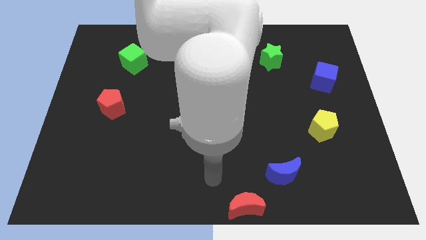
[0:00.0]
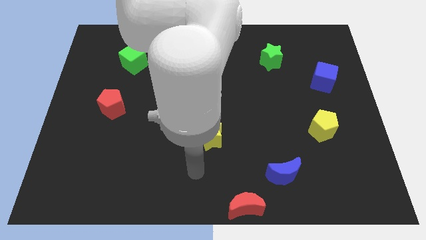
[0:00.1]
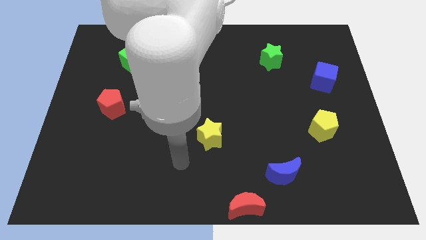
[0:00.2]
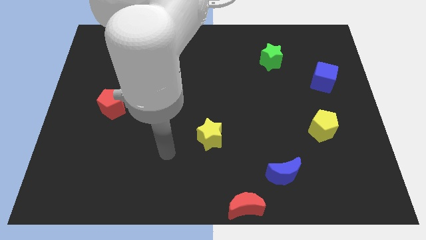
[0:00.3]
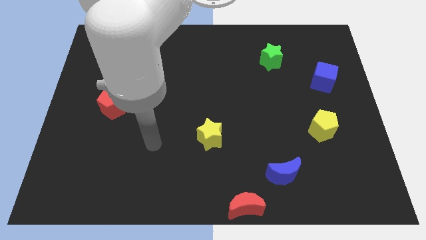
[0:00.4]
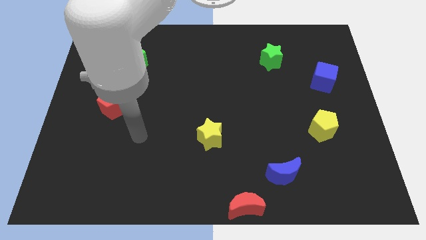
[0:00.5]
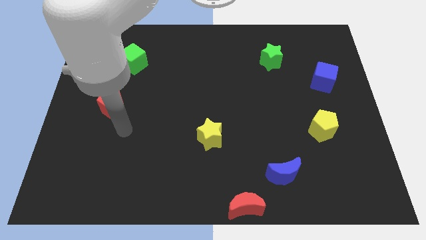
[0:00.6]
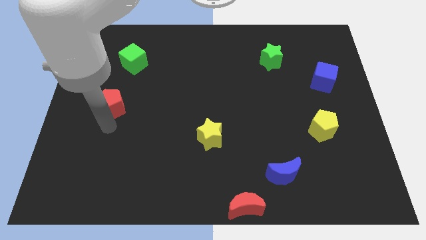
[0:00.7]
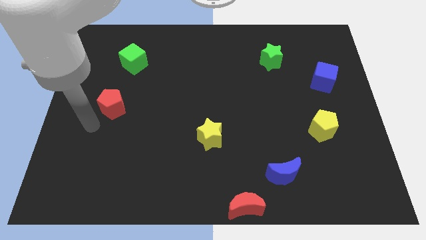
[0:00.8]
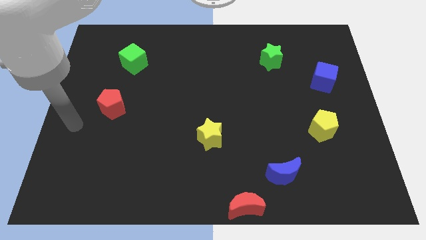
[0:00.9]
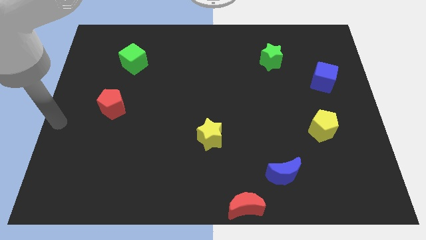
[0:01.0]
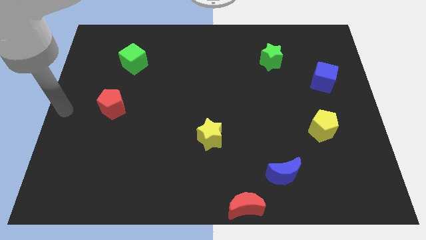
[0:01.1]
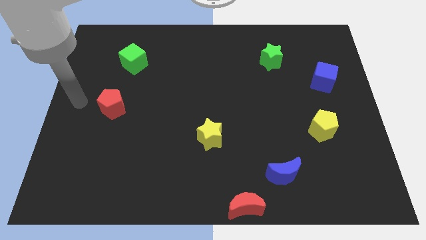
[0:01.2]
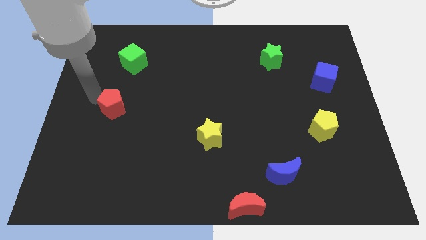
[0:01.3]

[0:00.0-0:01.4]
point the arm to the left of the red pentagon

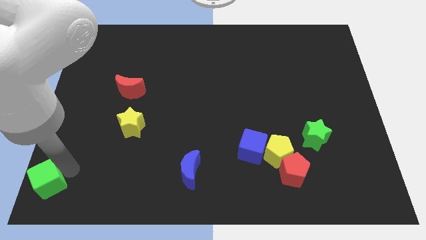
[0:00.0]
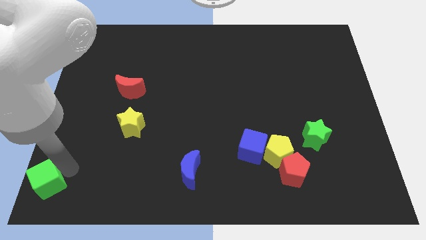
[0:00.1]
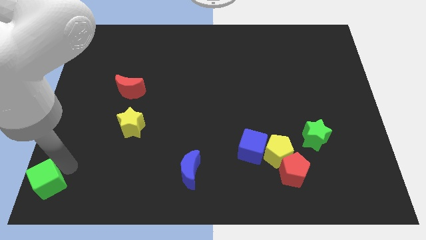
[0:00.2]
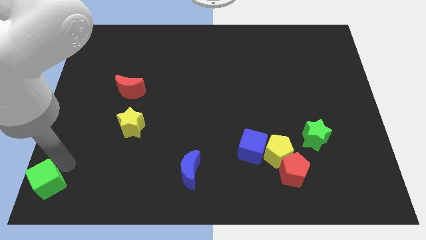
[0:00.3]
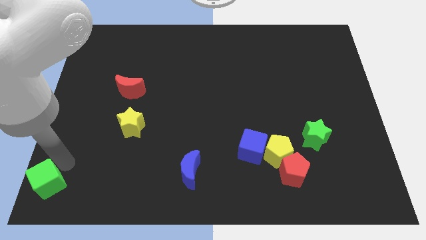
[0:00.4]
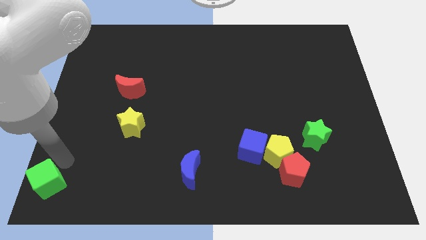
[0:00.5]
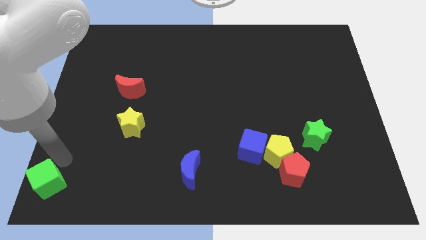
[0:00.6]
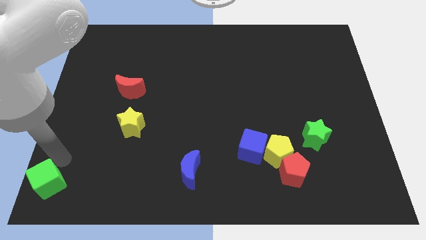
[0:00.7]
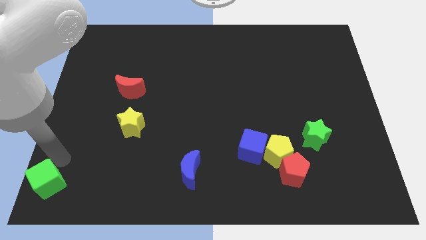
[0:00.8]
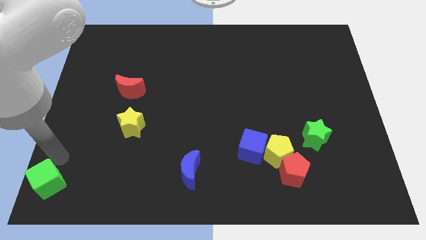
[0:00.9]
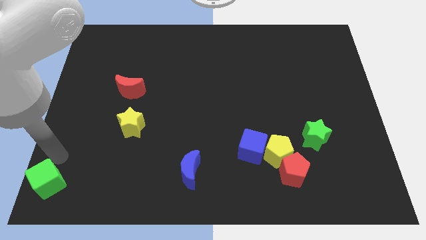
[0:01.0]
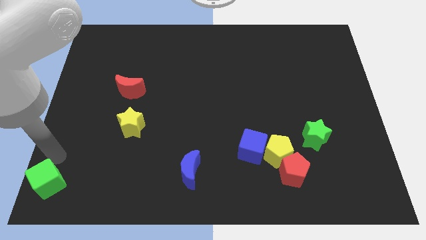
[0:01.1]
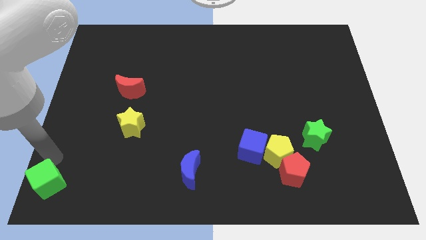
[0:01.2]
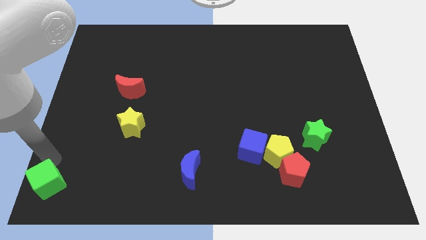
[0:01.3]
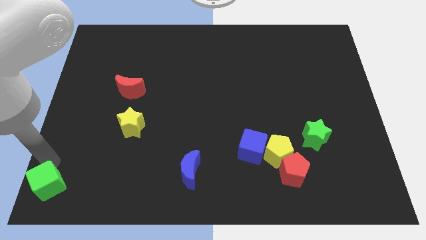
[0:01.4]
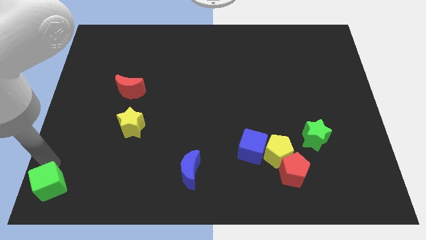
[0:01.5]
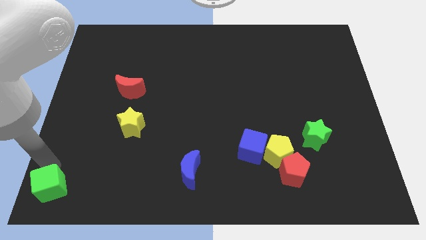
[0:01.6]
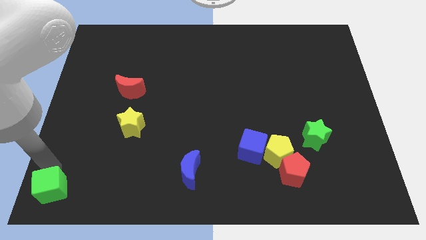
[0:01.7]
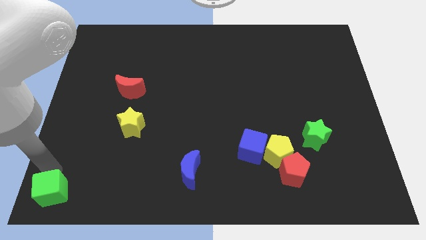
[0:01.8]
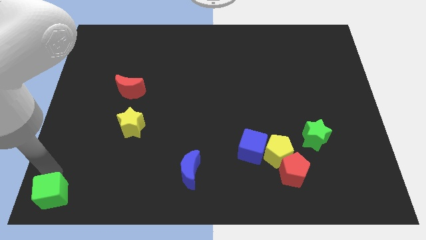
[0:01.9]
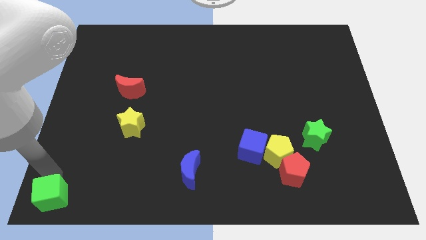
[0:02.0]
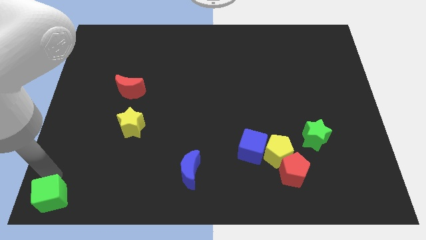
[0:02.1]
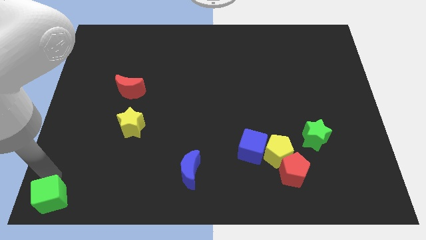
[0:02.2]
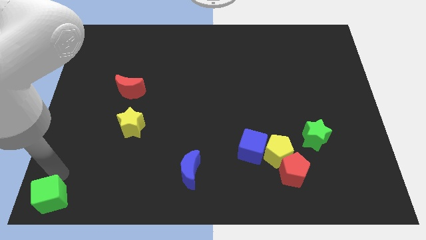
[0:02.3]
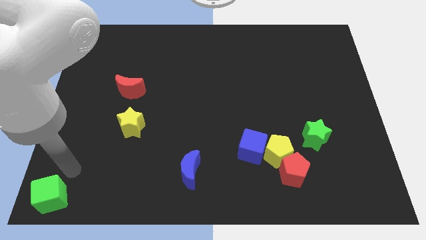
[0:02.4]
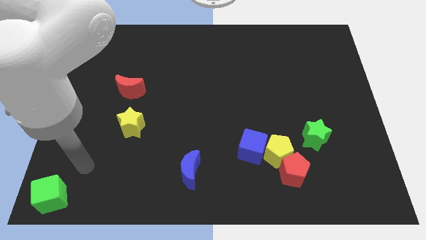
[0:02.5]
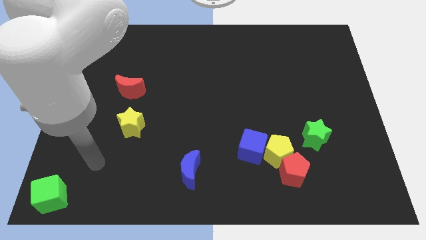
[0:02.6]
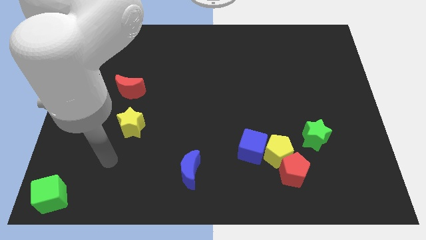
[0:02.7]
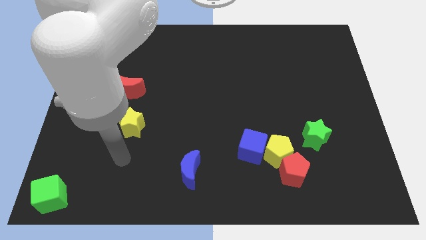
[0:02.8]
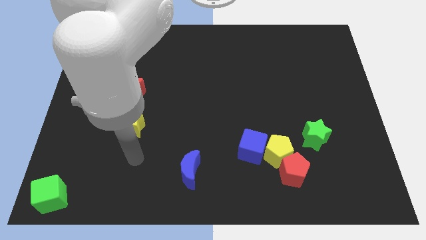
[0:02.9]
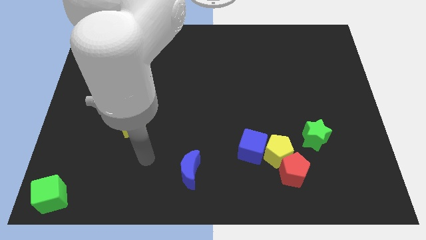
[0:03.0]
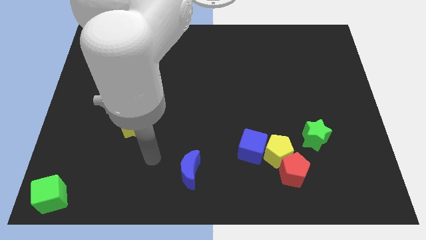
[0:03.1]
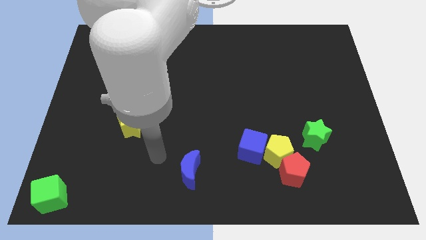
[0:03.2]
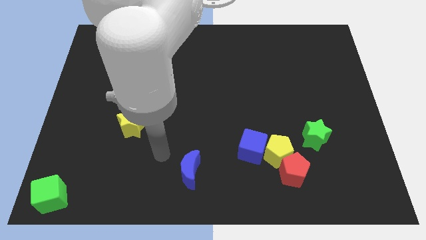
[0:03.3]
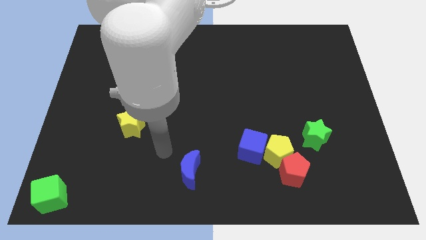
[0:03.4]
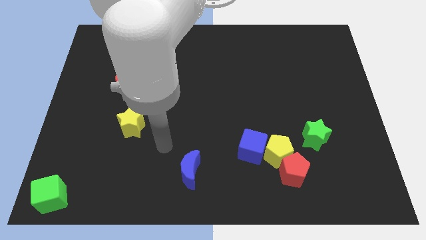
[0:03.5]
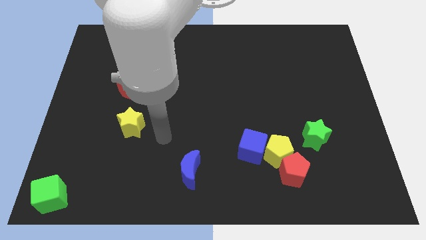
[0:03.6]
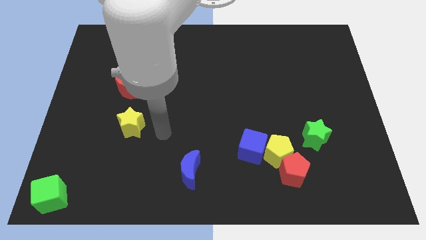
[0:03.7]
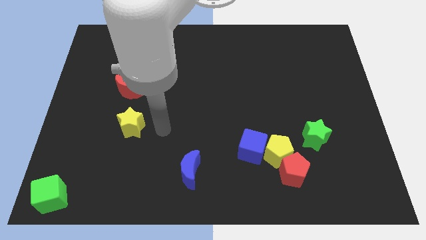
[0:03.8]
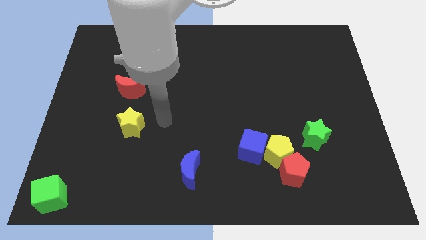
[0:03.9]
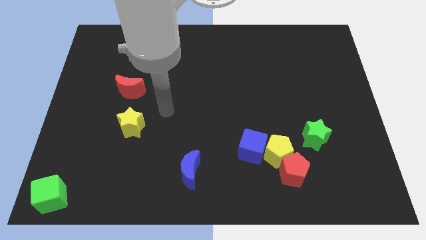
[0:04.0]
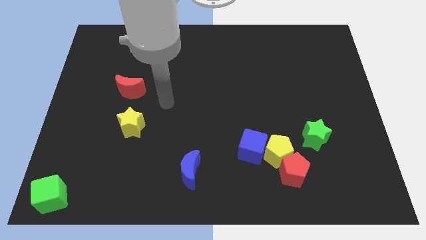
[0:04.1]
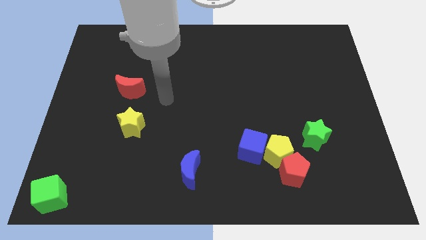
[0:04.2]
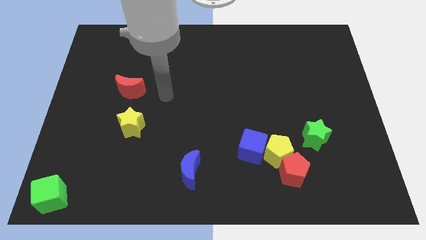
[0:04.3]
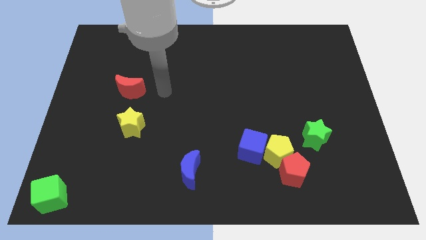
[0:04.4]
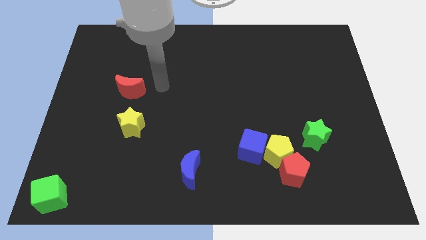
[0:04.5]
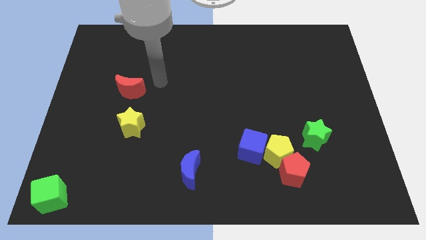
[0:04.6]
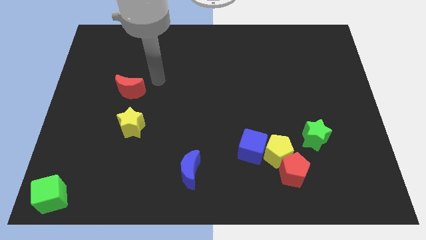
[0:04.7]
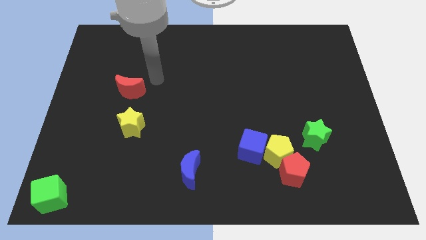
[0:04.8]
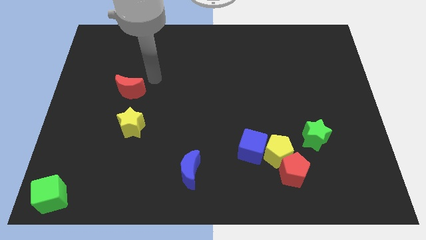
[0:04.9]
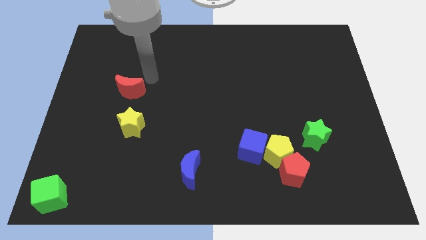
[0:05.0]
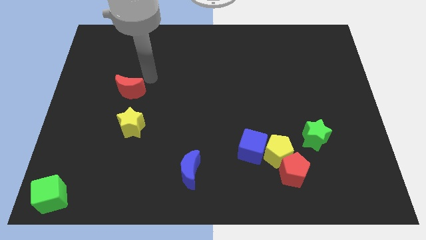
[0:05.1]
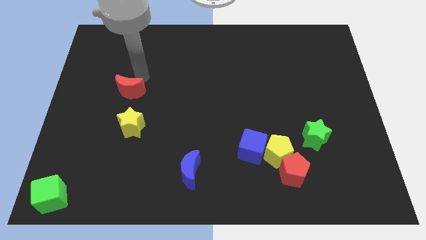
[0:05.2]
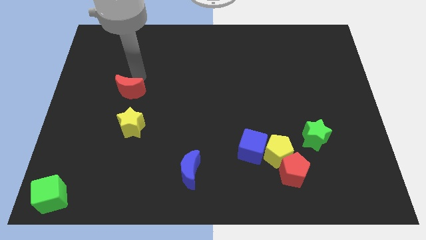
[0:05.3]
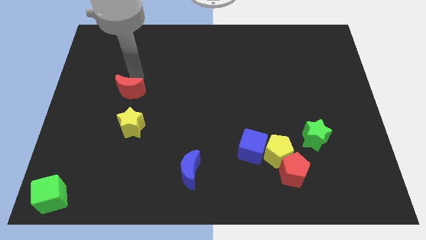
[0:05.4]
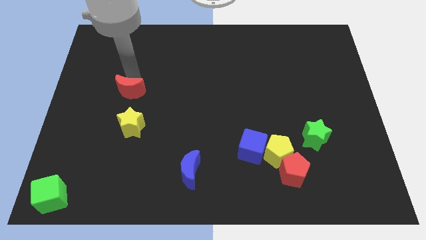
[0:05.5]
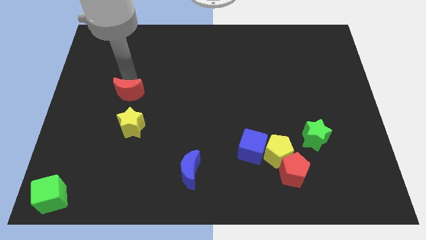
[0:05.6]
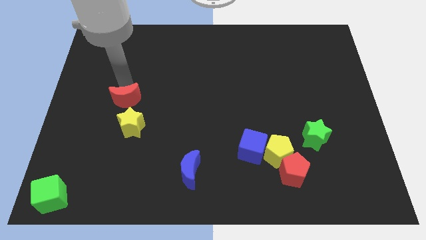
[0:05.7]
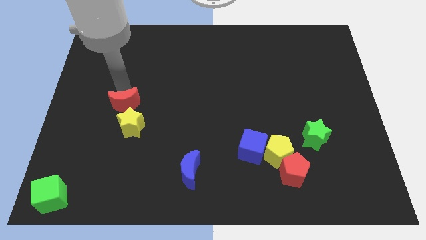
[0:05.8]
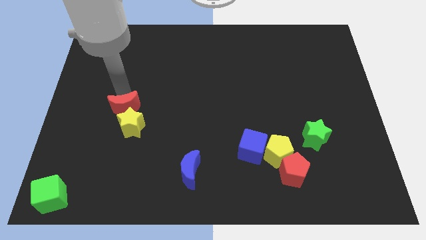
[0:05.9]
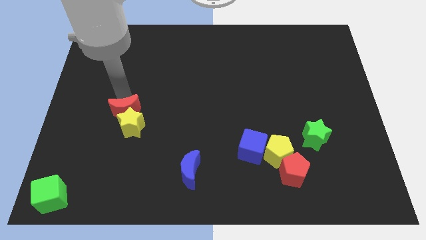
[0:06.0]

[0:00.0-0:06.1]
move the red moon above the yellow star

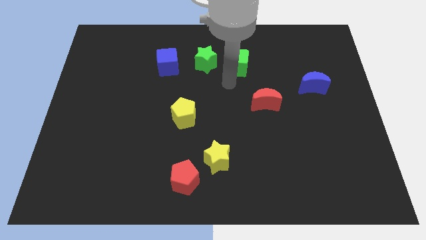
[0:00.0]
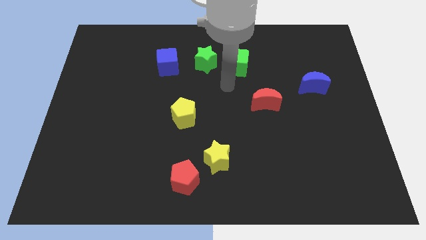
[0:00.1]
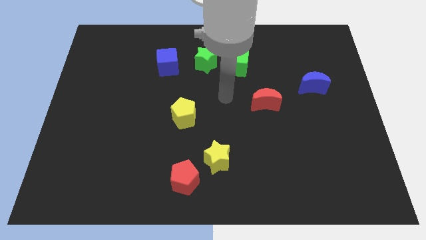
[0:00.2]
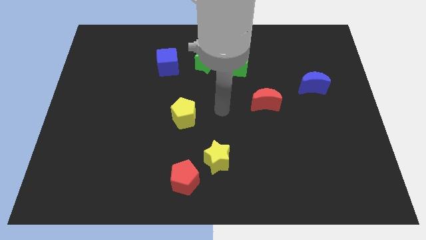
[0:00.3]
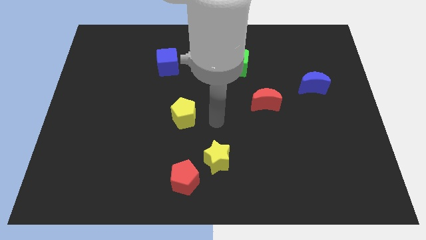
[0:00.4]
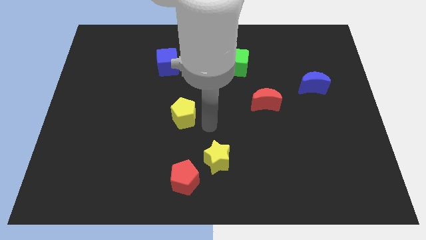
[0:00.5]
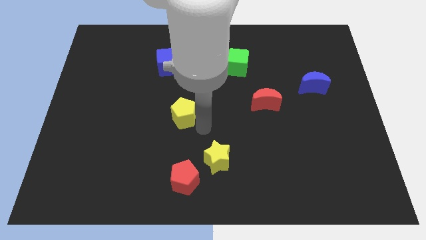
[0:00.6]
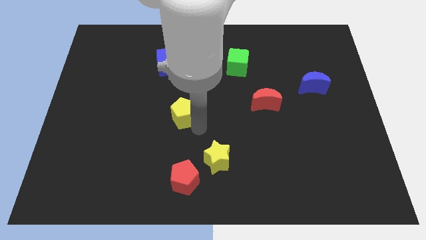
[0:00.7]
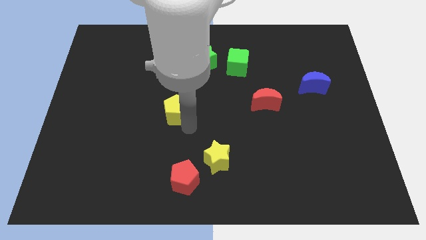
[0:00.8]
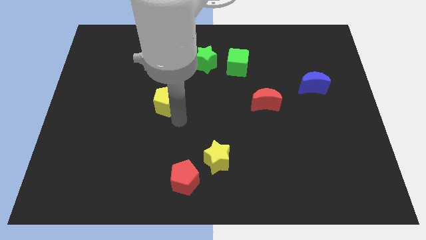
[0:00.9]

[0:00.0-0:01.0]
move your arm to the bottom of yellow pentagon

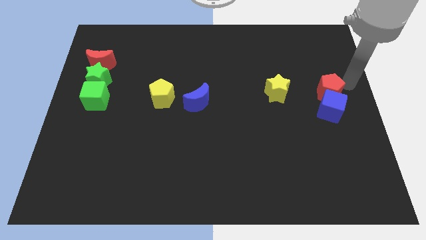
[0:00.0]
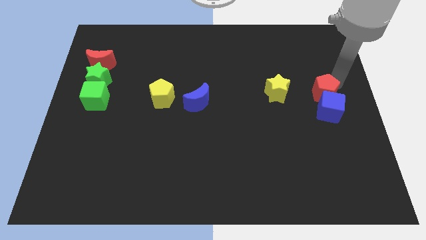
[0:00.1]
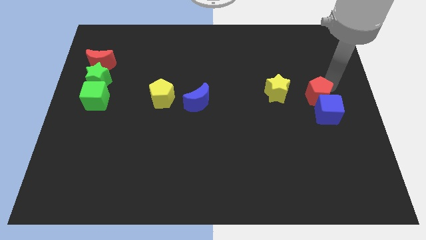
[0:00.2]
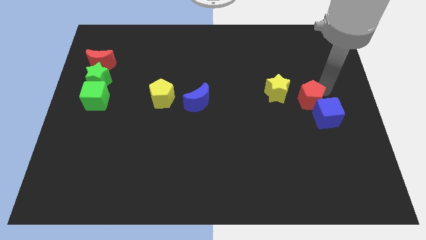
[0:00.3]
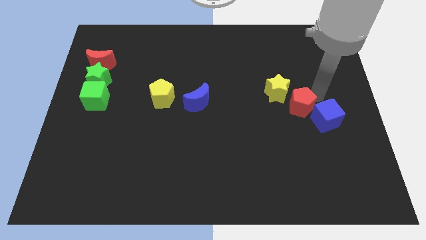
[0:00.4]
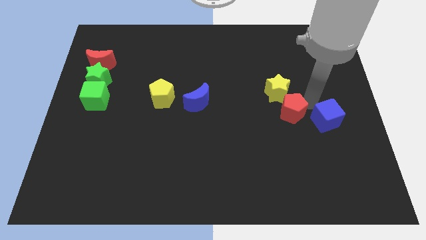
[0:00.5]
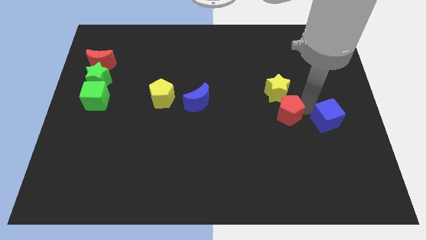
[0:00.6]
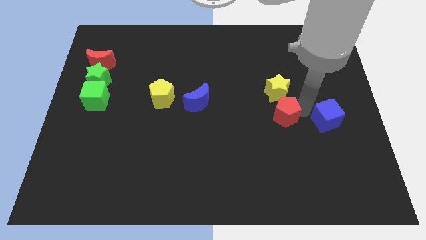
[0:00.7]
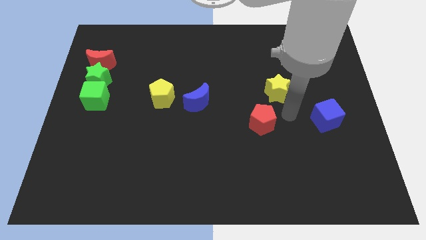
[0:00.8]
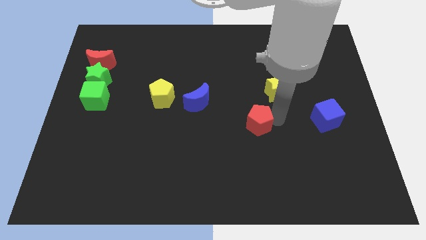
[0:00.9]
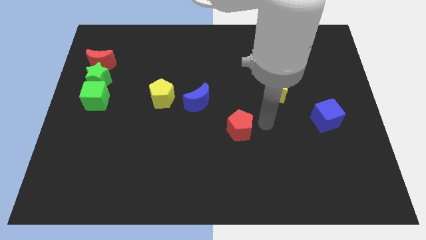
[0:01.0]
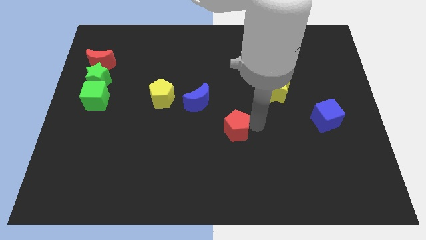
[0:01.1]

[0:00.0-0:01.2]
separate the red pentagon from the blue cube
